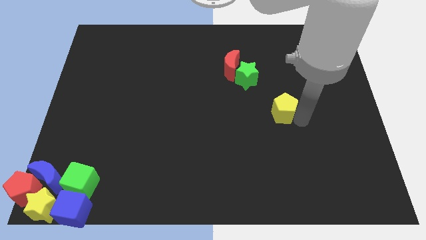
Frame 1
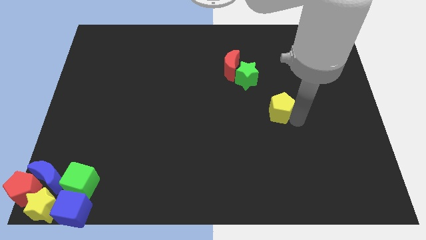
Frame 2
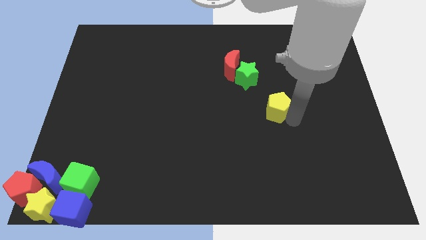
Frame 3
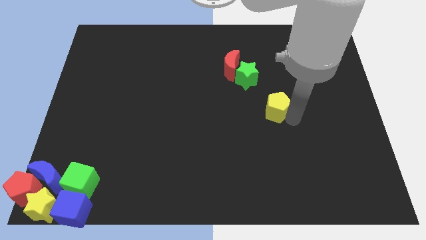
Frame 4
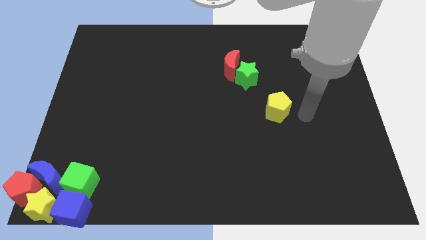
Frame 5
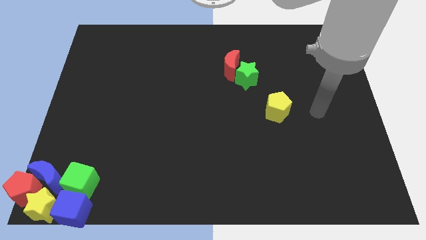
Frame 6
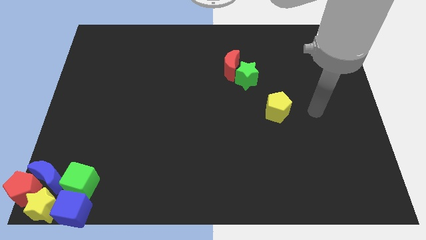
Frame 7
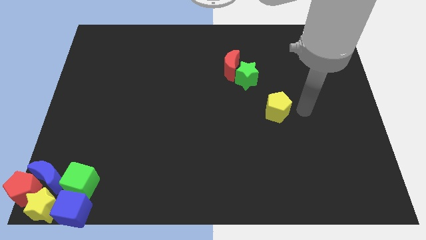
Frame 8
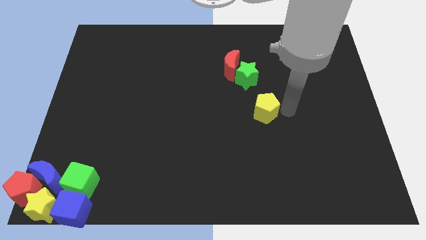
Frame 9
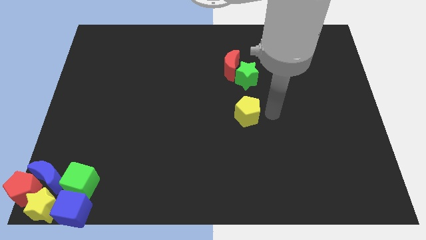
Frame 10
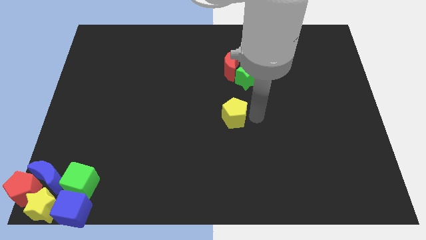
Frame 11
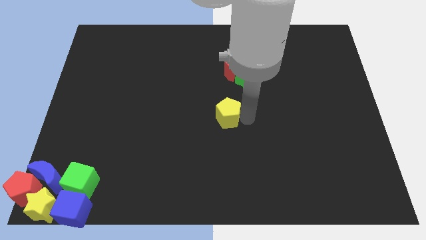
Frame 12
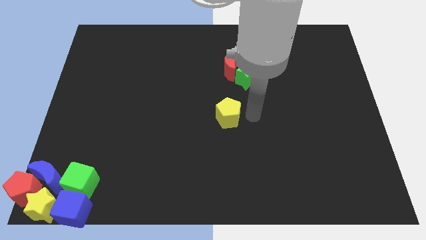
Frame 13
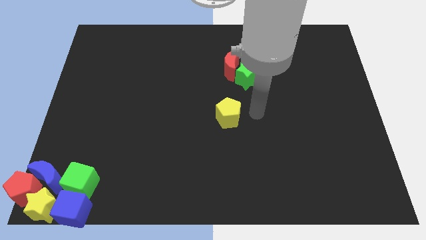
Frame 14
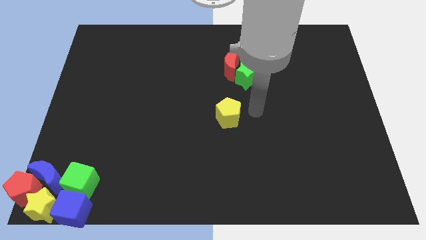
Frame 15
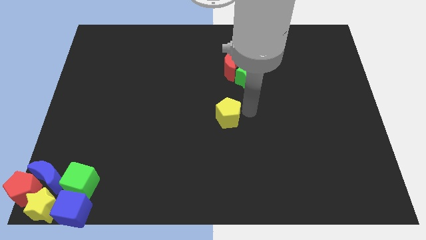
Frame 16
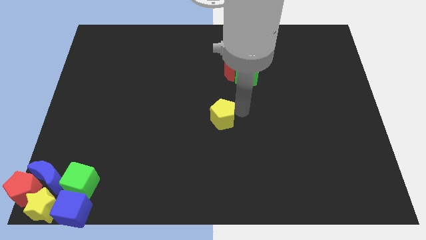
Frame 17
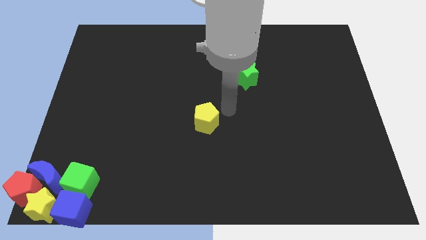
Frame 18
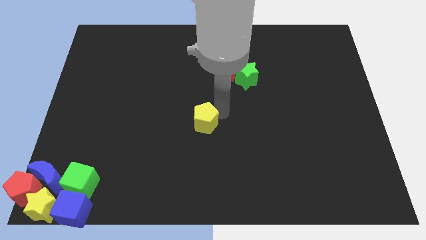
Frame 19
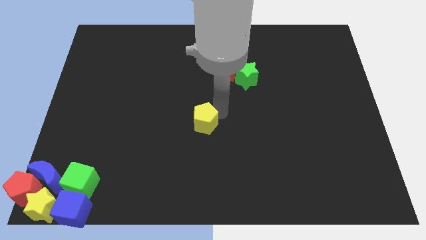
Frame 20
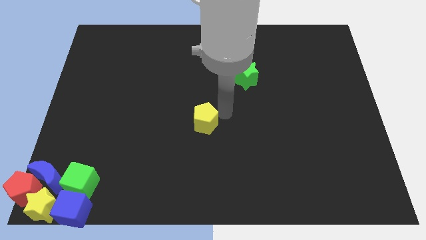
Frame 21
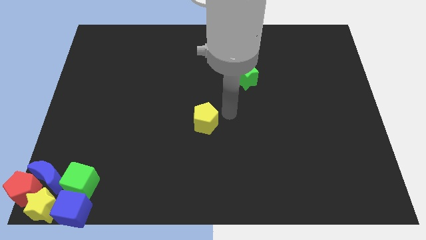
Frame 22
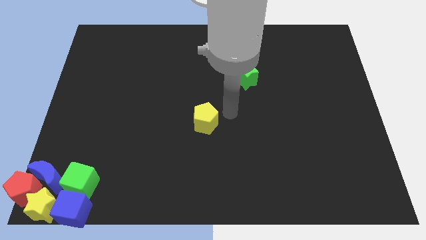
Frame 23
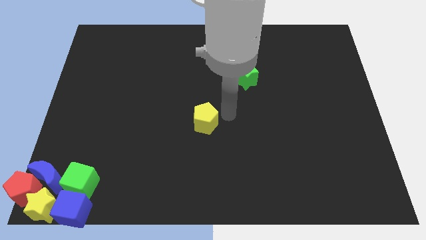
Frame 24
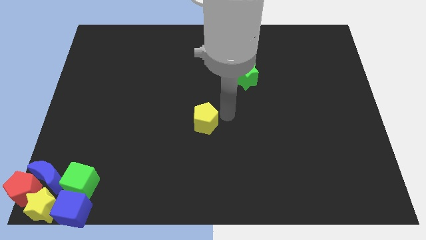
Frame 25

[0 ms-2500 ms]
move the yellow pentagon to the center

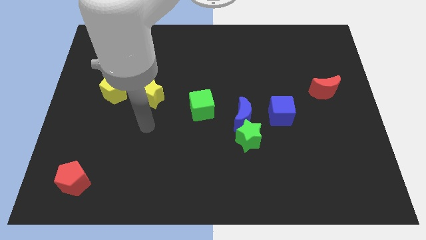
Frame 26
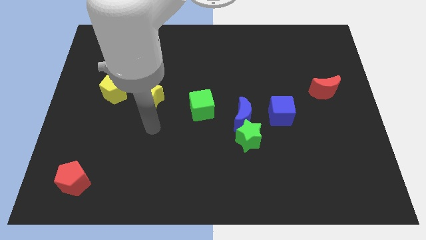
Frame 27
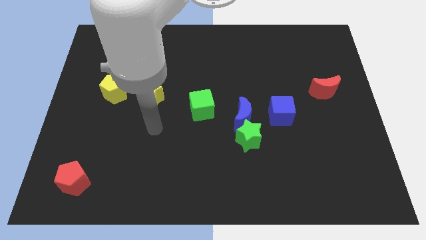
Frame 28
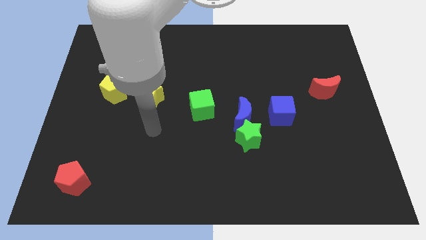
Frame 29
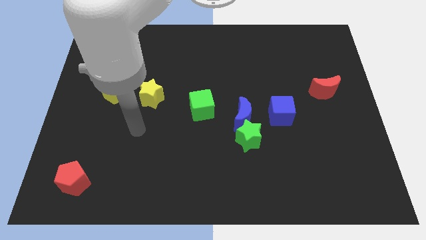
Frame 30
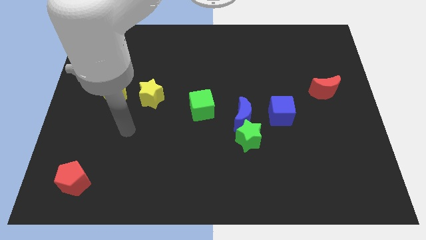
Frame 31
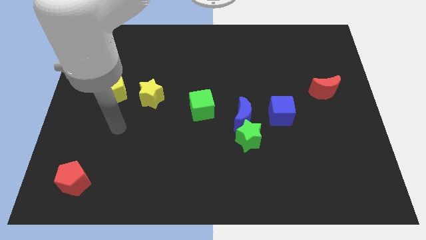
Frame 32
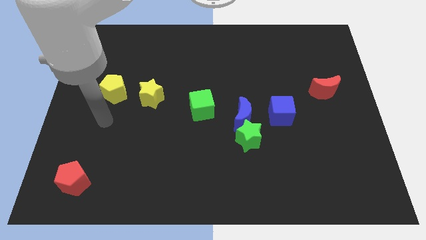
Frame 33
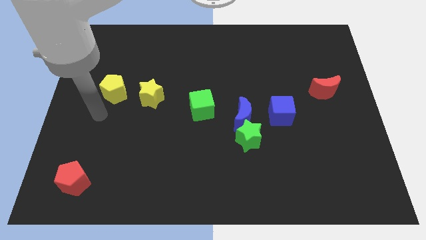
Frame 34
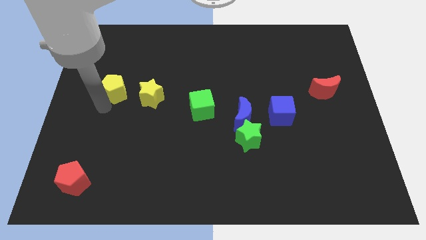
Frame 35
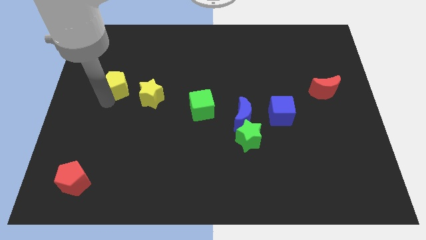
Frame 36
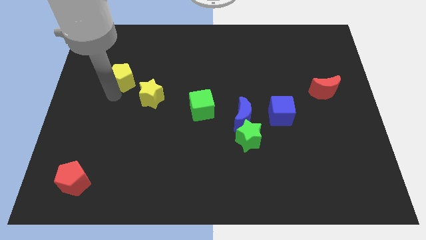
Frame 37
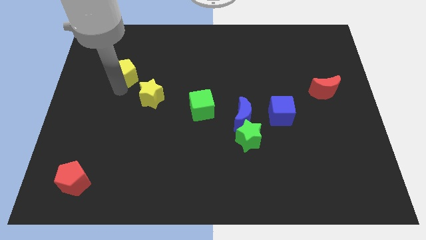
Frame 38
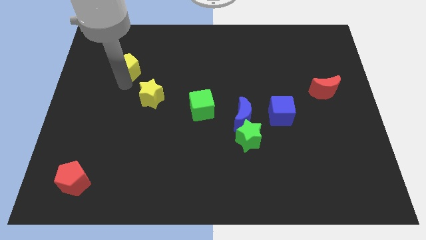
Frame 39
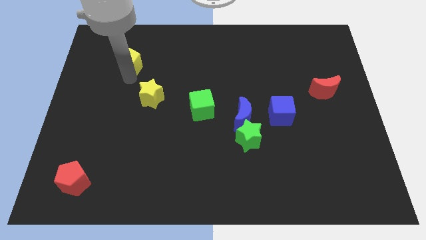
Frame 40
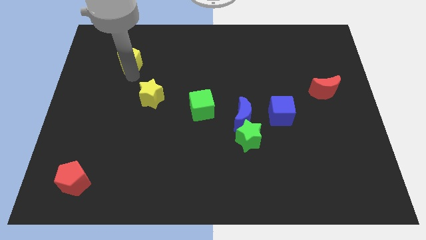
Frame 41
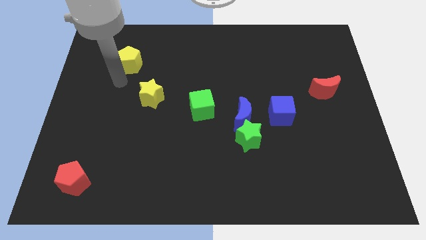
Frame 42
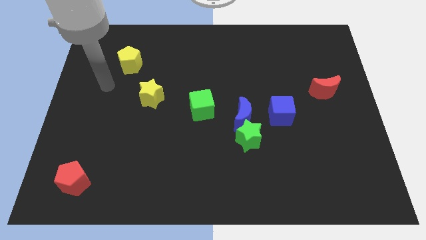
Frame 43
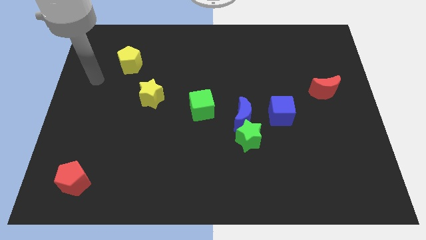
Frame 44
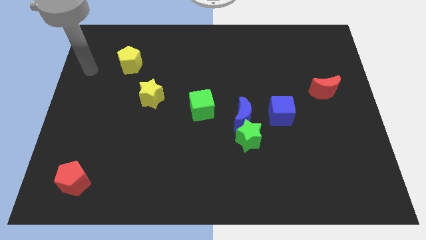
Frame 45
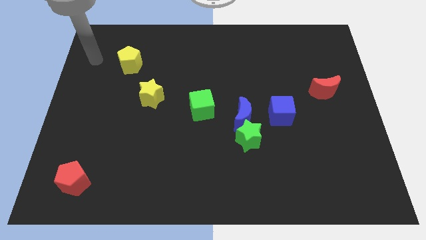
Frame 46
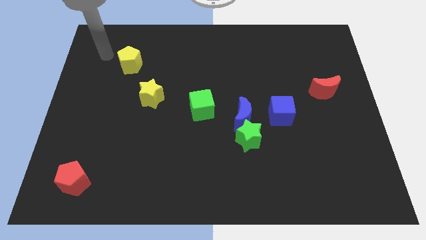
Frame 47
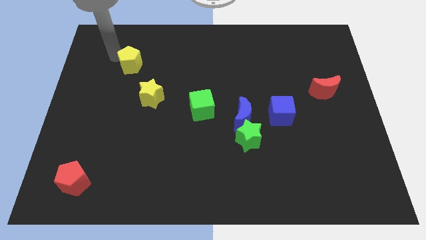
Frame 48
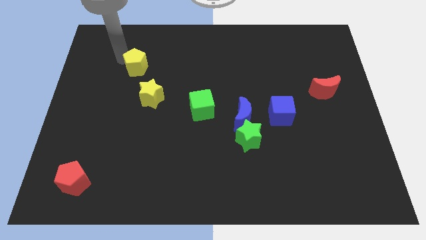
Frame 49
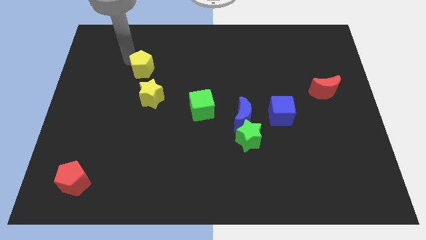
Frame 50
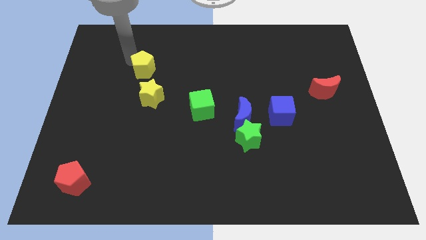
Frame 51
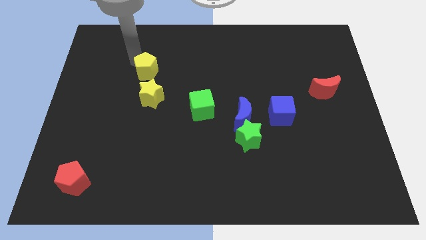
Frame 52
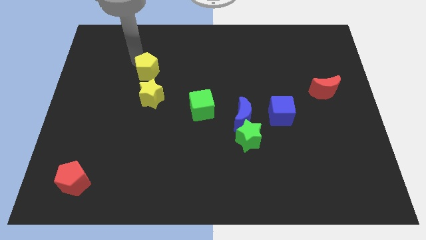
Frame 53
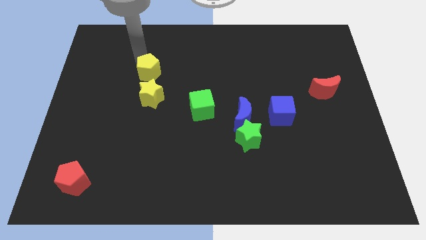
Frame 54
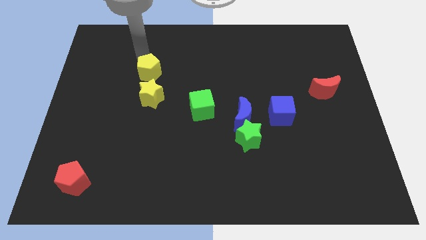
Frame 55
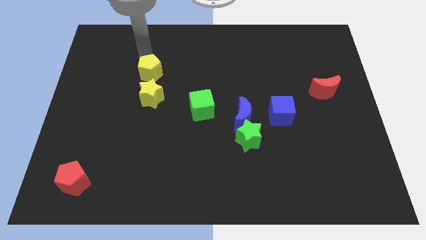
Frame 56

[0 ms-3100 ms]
place the yellow pentagon to the top of the yellow star

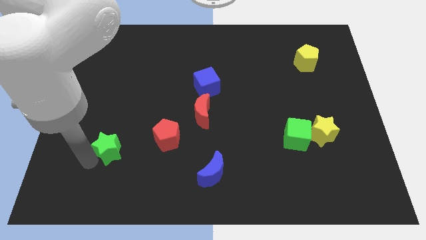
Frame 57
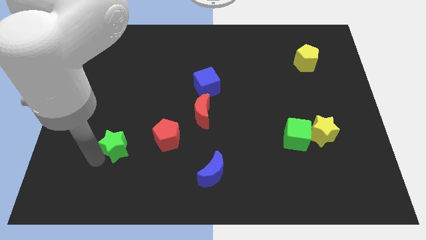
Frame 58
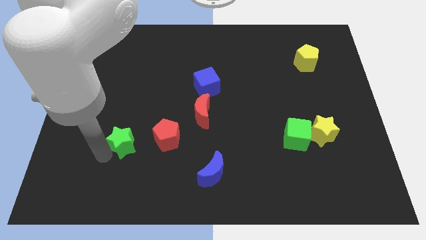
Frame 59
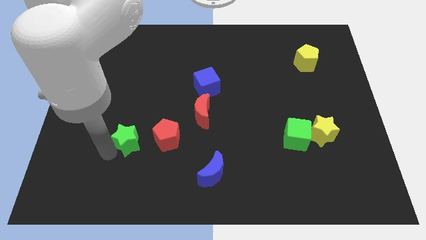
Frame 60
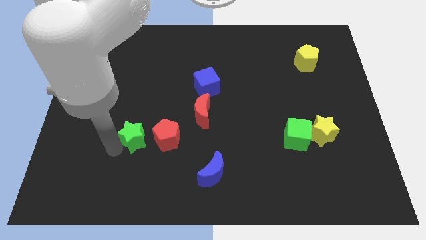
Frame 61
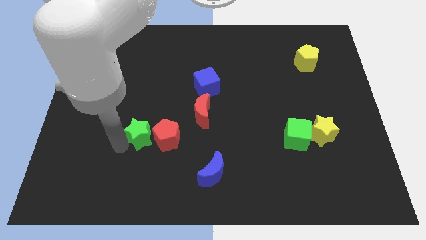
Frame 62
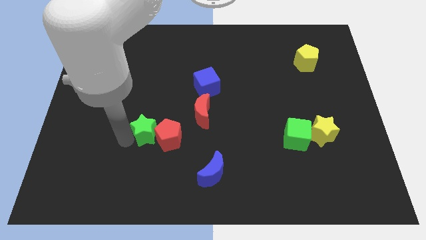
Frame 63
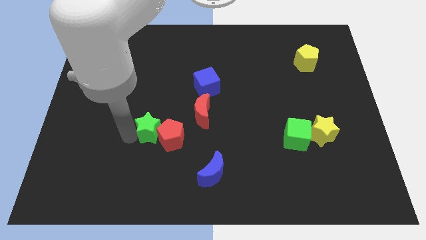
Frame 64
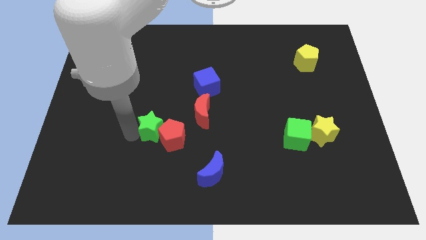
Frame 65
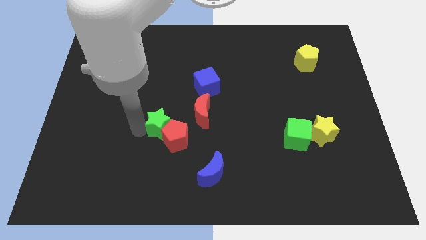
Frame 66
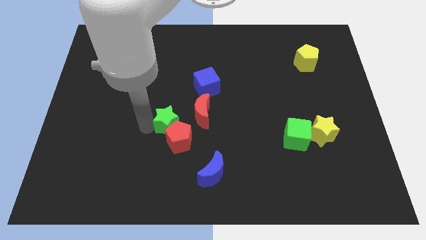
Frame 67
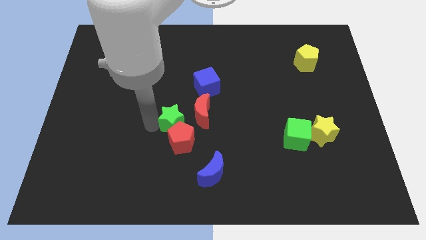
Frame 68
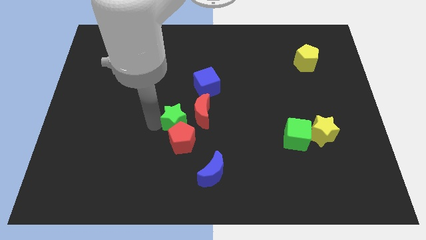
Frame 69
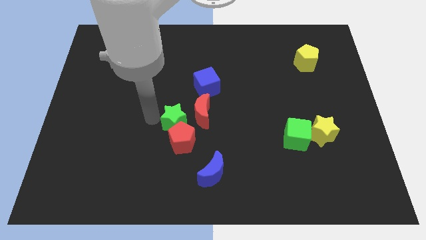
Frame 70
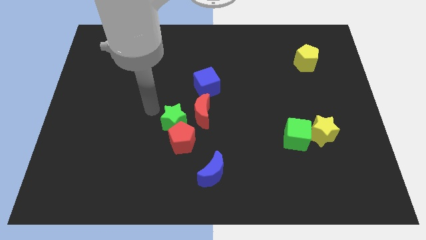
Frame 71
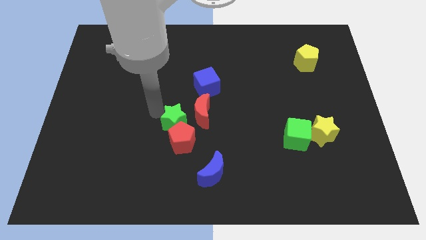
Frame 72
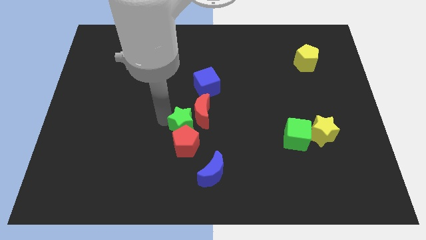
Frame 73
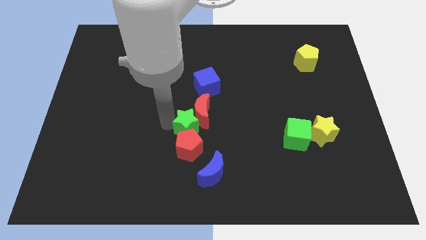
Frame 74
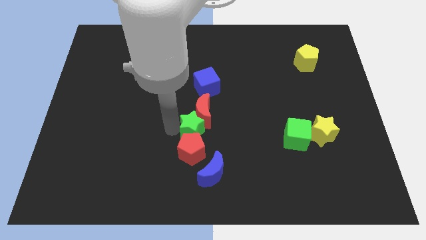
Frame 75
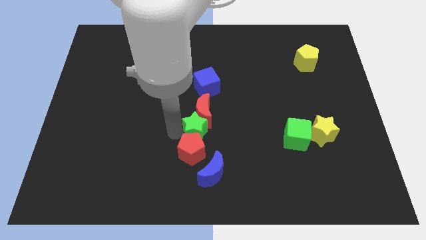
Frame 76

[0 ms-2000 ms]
place the green star to the bottom left of red crescent

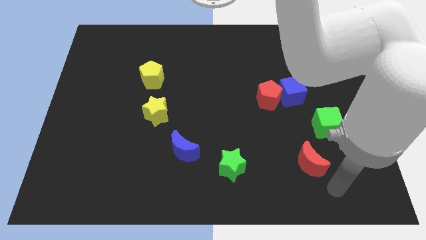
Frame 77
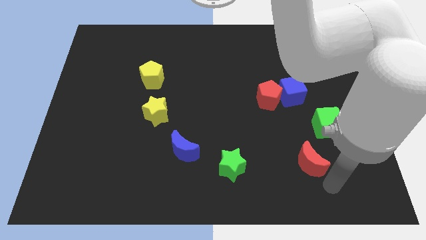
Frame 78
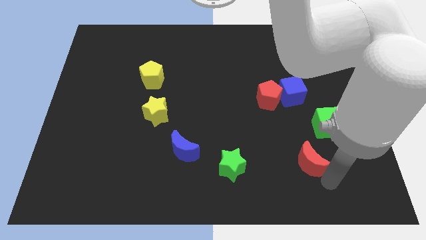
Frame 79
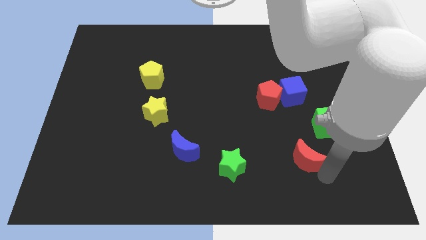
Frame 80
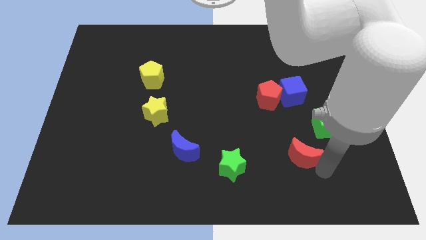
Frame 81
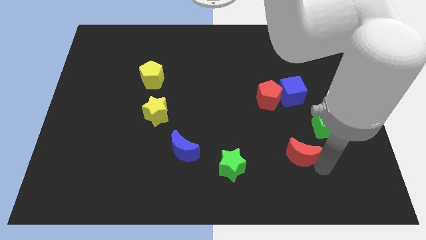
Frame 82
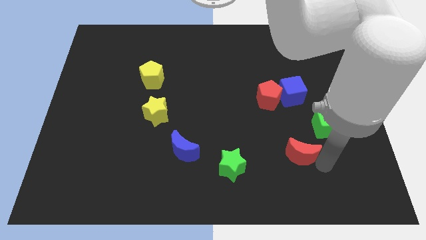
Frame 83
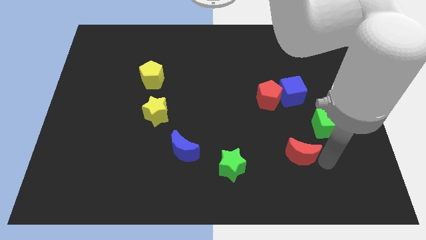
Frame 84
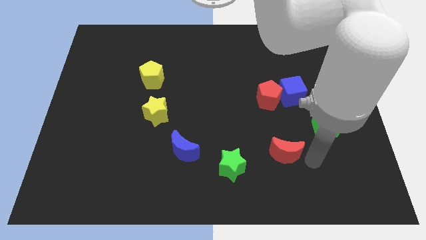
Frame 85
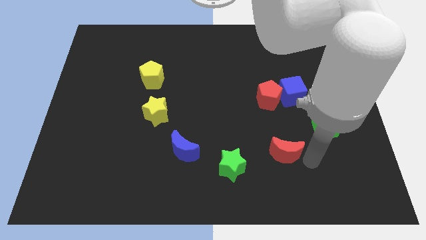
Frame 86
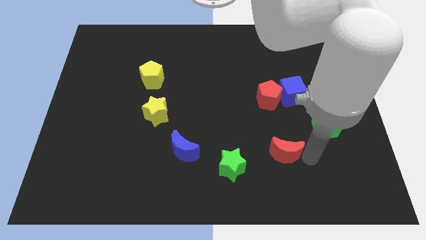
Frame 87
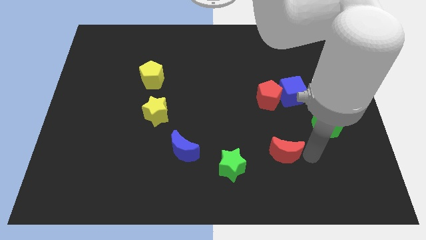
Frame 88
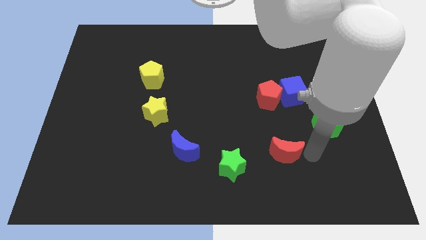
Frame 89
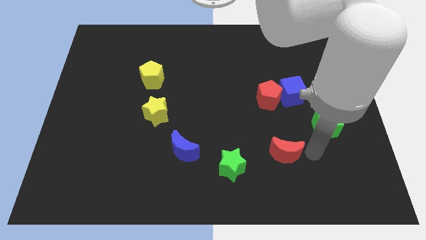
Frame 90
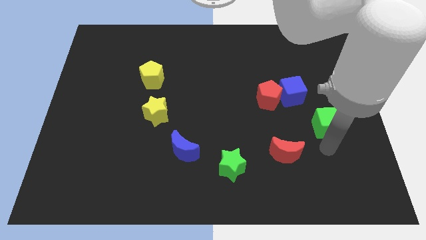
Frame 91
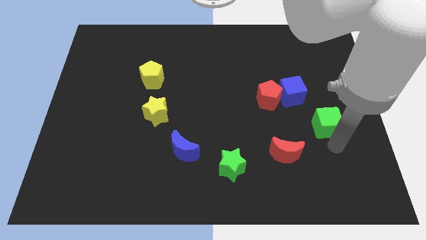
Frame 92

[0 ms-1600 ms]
put the red crescent between the green star and green cube
